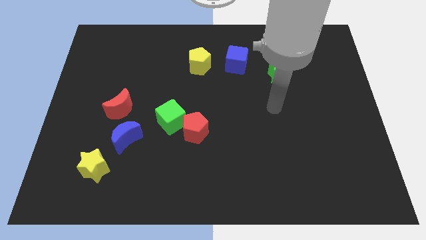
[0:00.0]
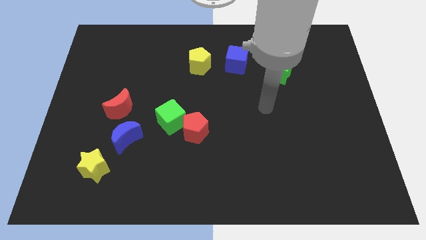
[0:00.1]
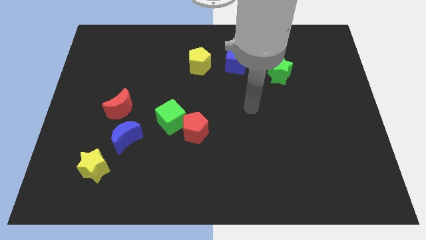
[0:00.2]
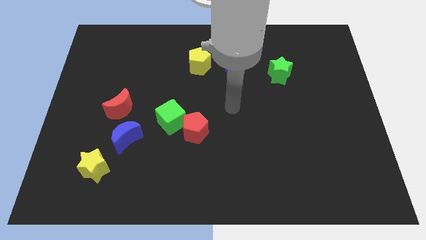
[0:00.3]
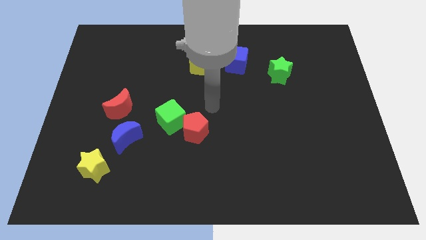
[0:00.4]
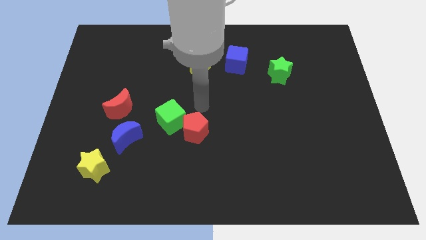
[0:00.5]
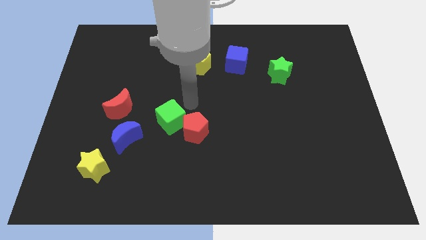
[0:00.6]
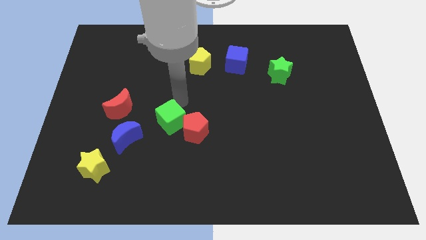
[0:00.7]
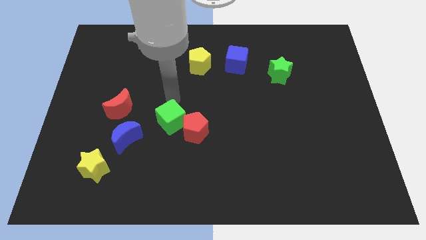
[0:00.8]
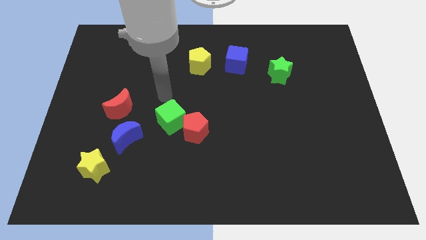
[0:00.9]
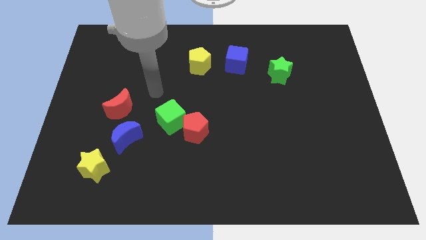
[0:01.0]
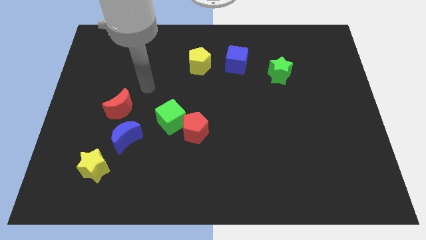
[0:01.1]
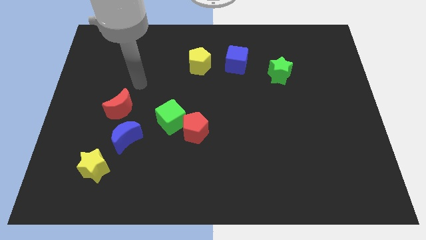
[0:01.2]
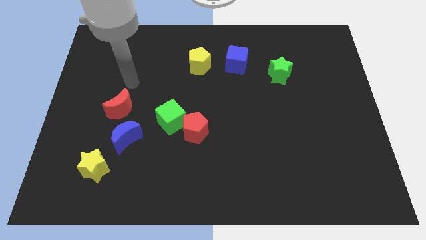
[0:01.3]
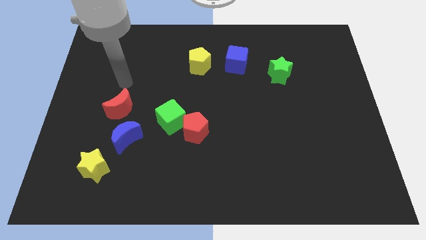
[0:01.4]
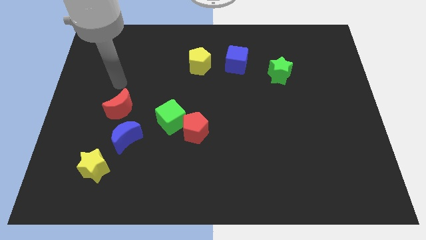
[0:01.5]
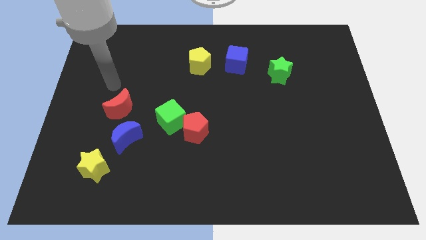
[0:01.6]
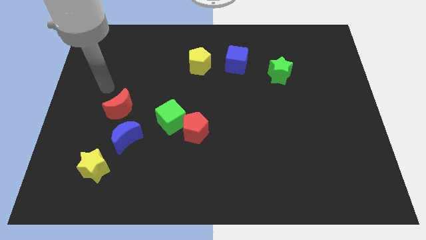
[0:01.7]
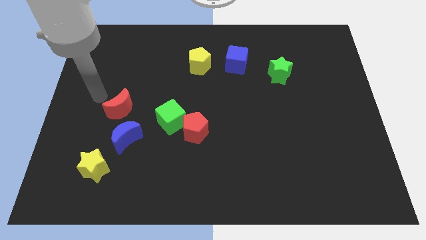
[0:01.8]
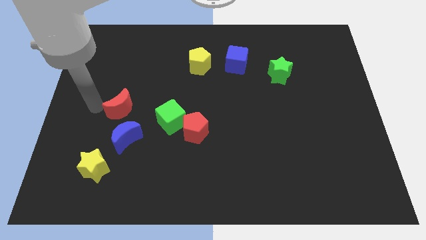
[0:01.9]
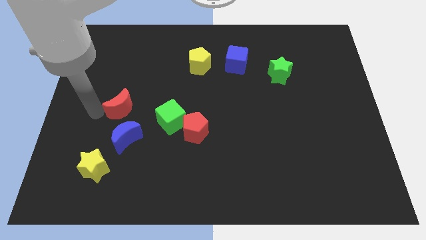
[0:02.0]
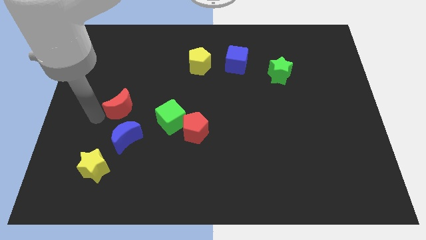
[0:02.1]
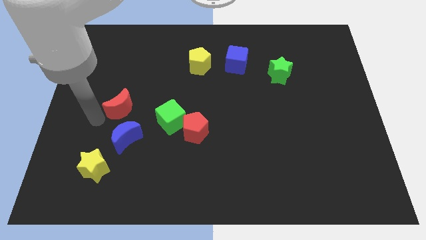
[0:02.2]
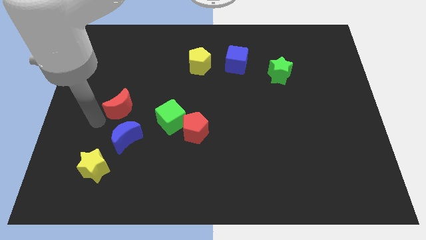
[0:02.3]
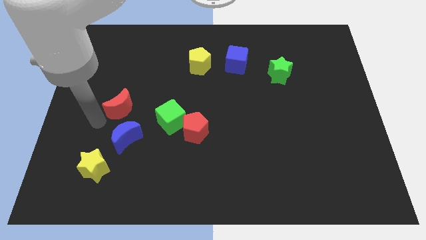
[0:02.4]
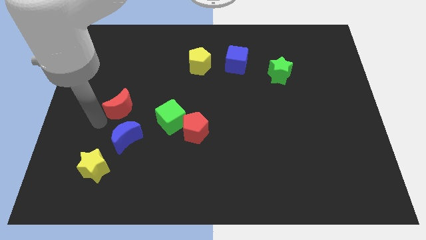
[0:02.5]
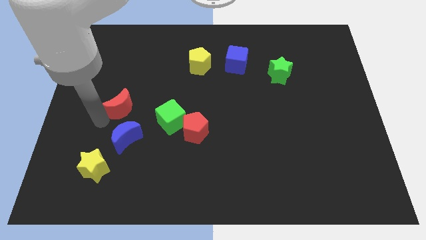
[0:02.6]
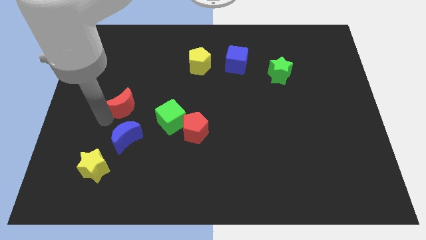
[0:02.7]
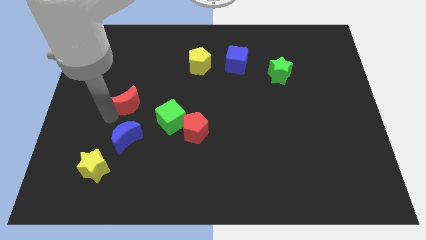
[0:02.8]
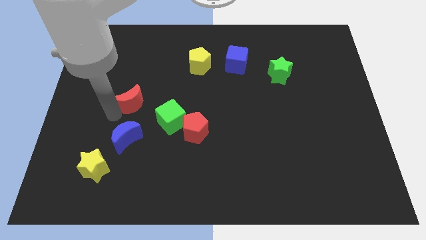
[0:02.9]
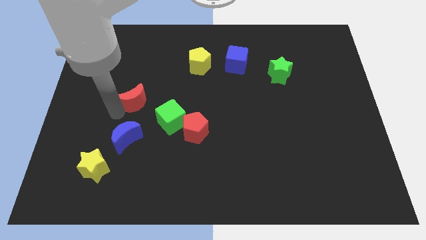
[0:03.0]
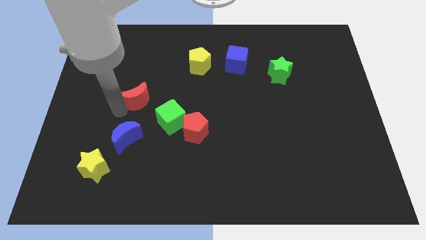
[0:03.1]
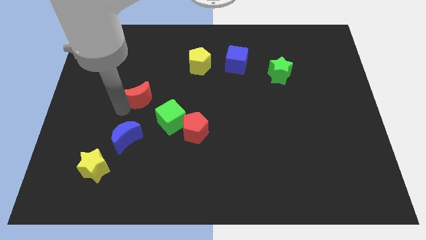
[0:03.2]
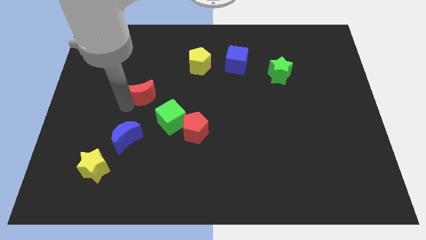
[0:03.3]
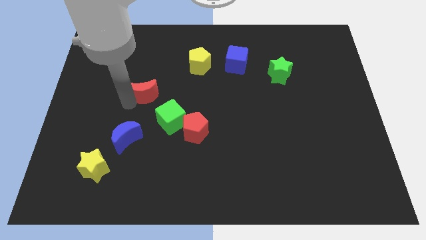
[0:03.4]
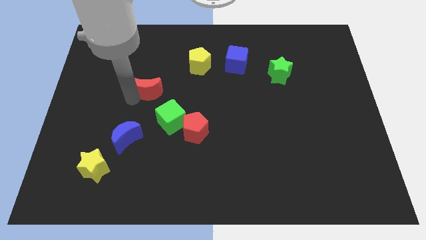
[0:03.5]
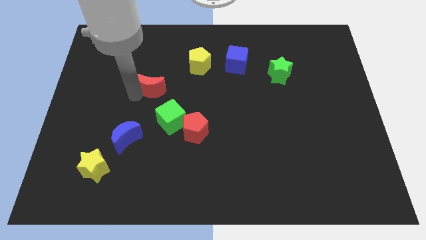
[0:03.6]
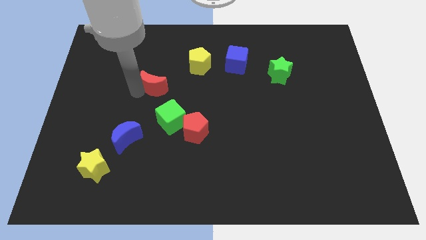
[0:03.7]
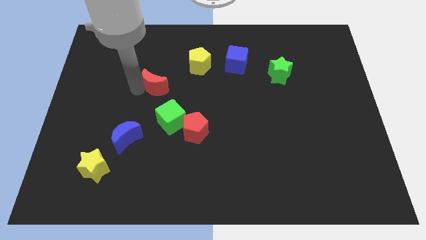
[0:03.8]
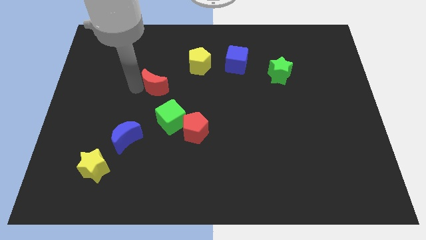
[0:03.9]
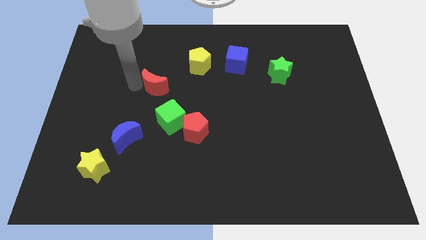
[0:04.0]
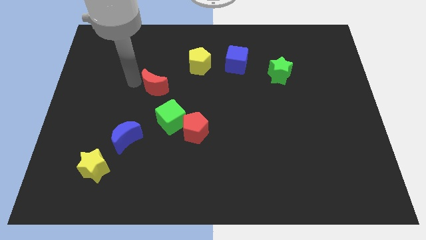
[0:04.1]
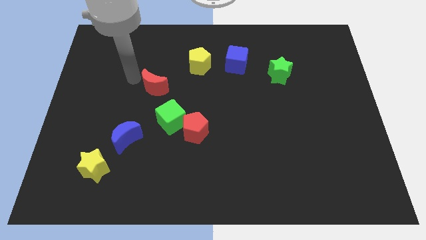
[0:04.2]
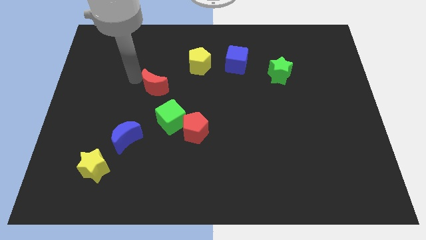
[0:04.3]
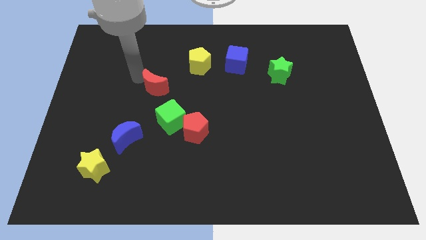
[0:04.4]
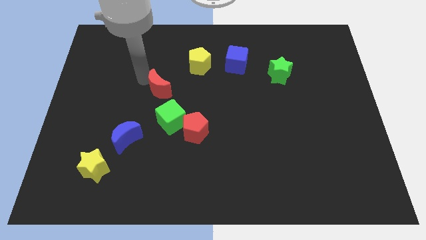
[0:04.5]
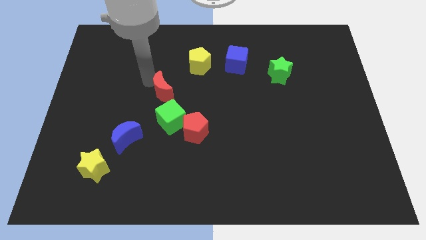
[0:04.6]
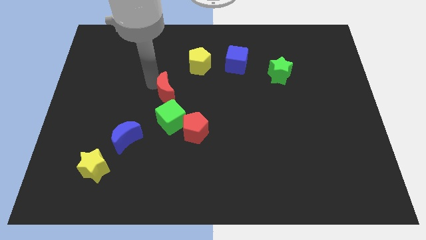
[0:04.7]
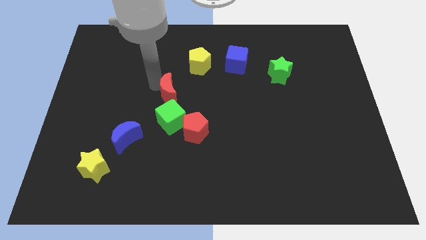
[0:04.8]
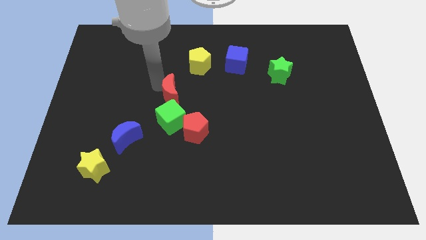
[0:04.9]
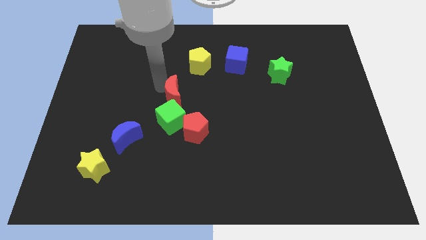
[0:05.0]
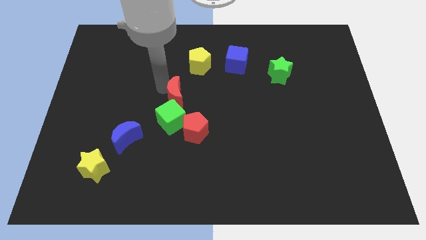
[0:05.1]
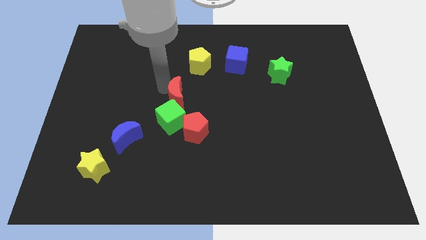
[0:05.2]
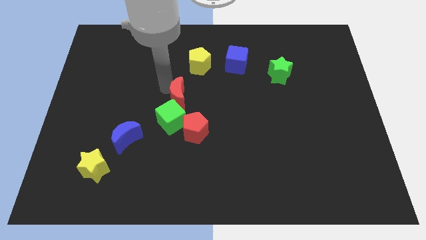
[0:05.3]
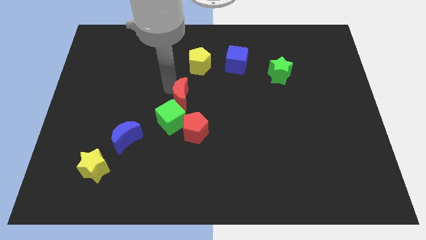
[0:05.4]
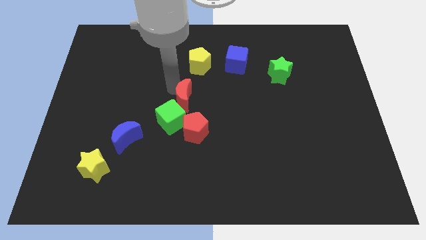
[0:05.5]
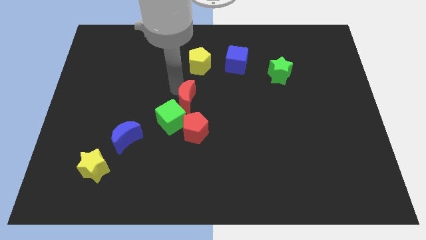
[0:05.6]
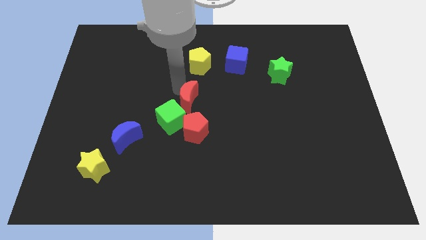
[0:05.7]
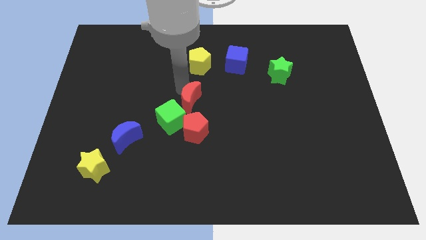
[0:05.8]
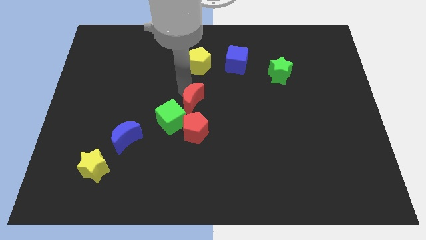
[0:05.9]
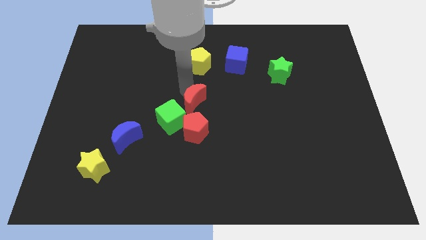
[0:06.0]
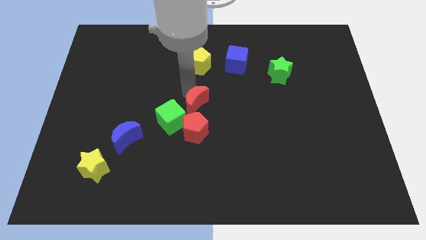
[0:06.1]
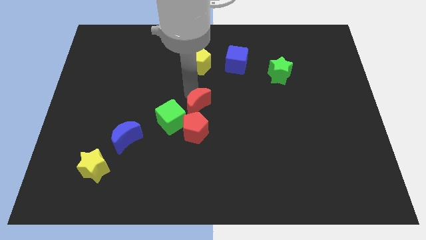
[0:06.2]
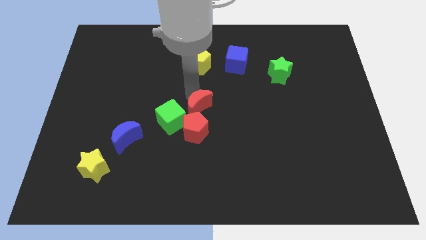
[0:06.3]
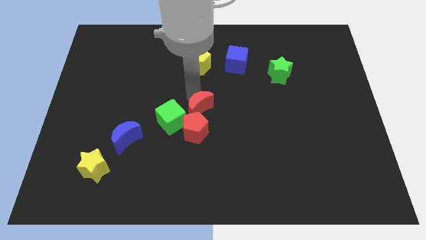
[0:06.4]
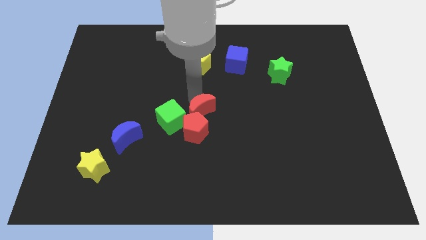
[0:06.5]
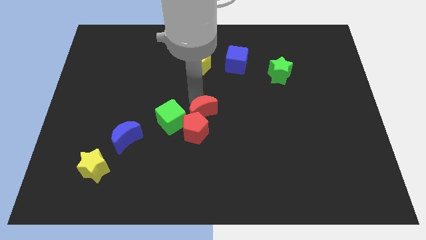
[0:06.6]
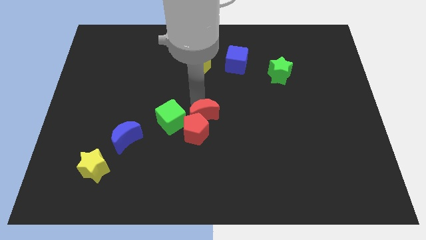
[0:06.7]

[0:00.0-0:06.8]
put the red moon to the red pentagon

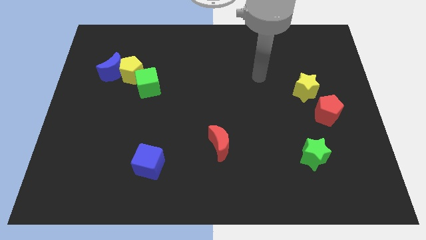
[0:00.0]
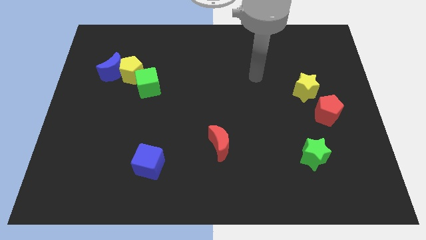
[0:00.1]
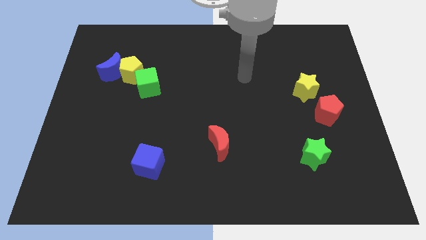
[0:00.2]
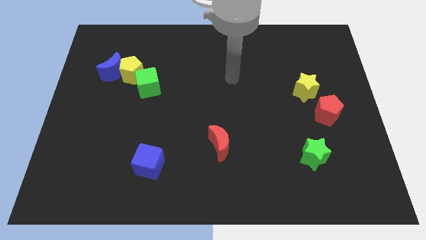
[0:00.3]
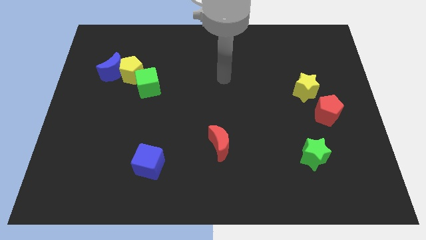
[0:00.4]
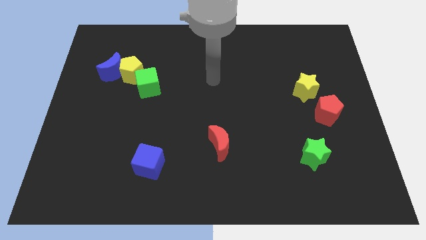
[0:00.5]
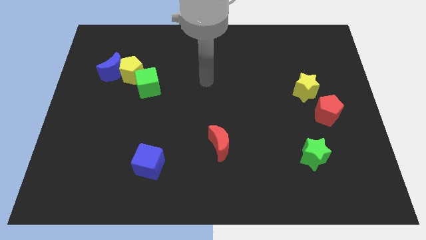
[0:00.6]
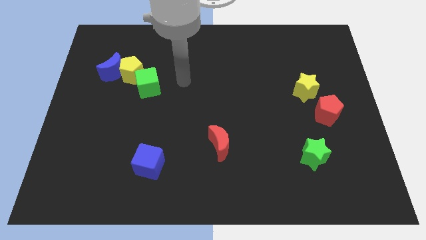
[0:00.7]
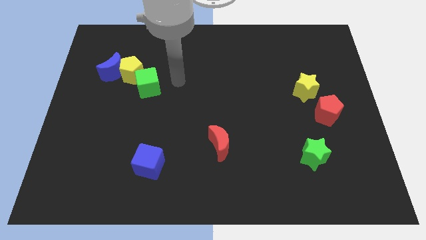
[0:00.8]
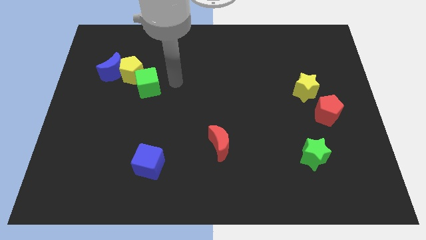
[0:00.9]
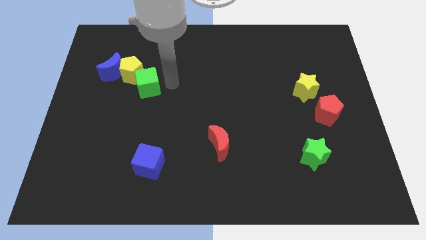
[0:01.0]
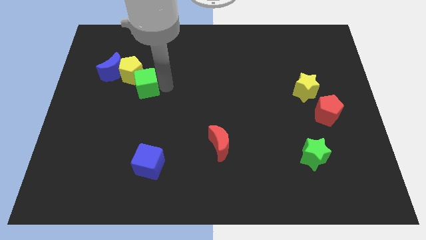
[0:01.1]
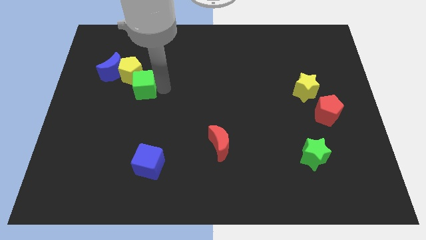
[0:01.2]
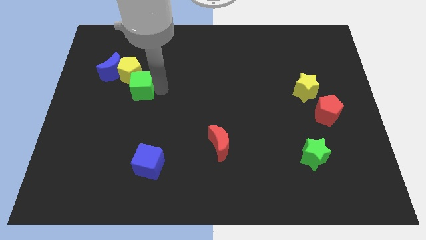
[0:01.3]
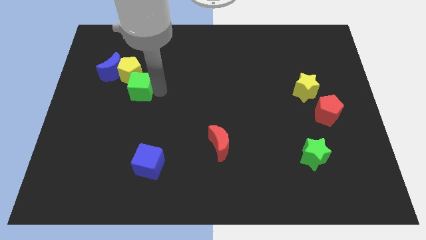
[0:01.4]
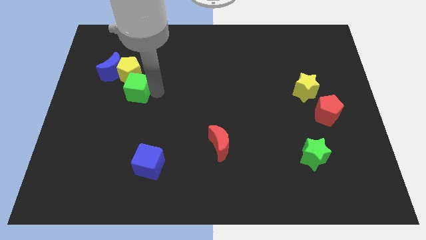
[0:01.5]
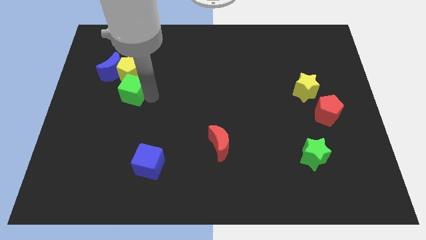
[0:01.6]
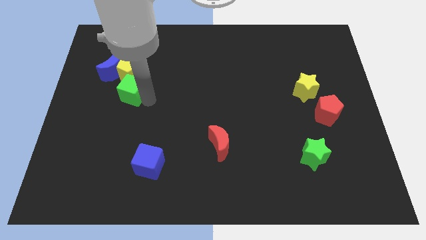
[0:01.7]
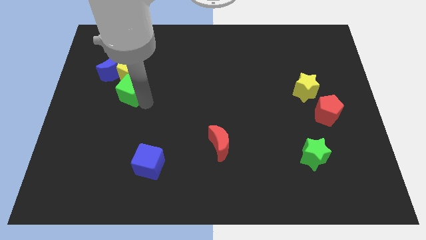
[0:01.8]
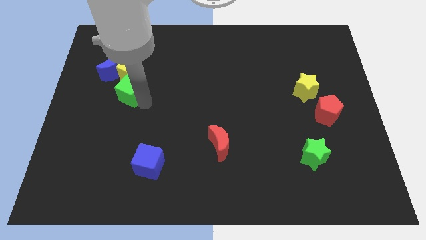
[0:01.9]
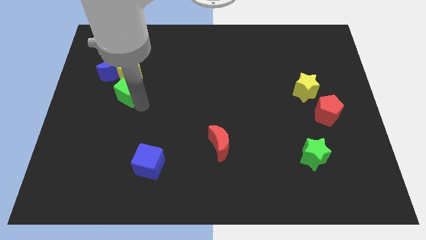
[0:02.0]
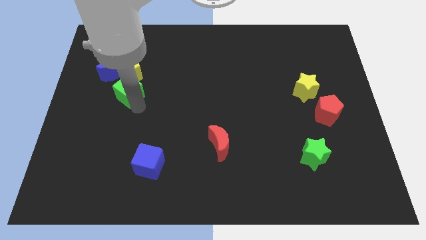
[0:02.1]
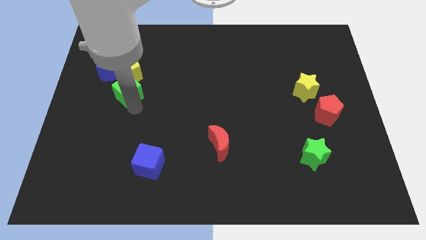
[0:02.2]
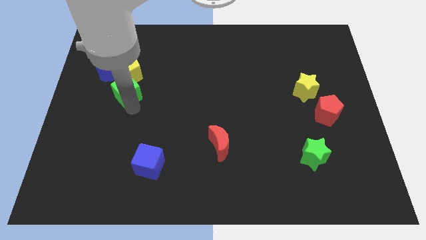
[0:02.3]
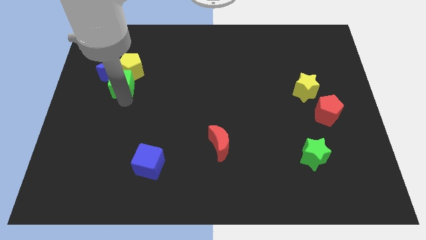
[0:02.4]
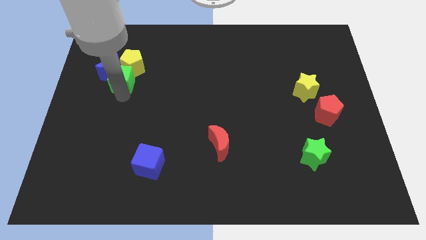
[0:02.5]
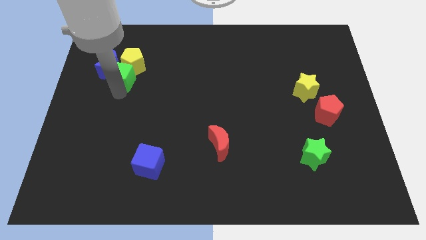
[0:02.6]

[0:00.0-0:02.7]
move the green cube next to the blue moon
